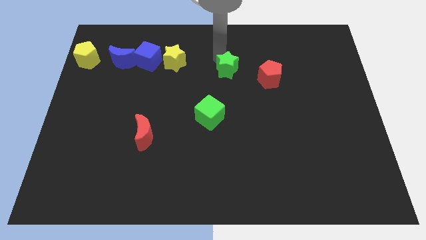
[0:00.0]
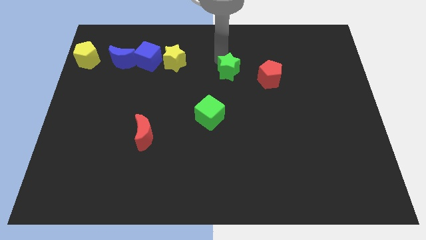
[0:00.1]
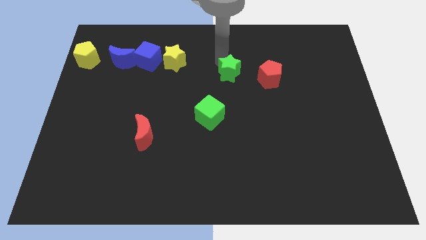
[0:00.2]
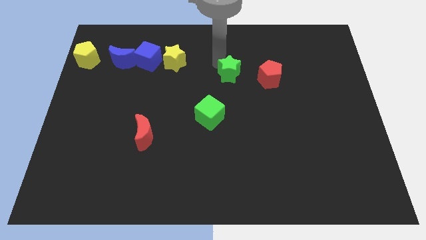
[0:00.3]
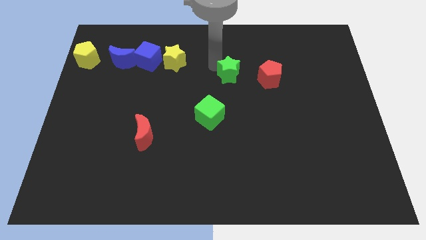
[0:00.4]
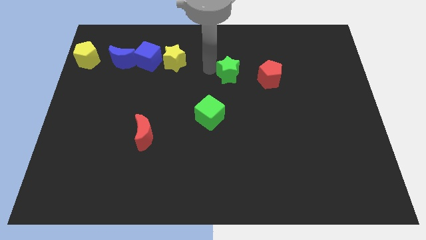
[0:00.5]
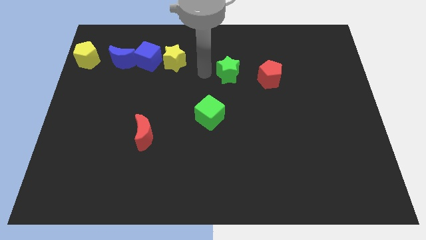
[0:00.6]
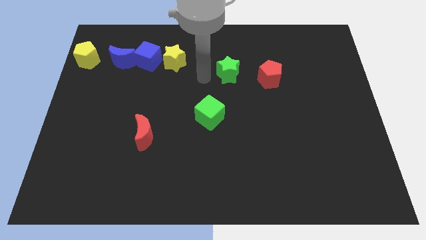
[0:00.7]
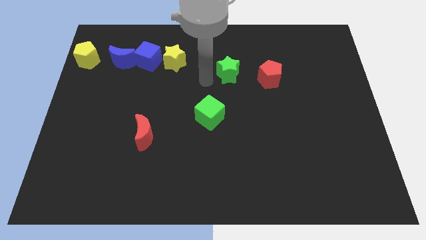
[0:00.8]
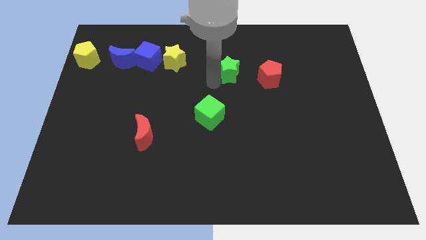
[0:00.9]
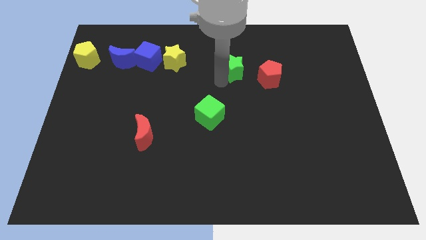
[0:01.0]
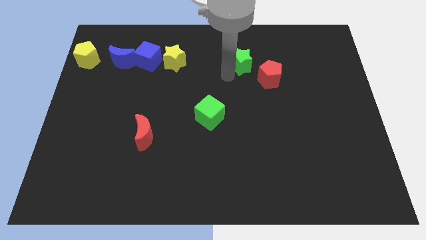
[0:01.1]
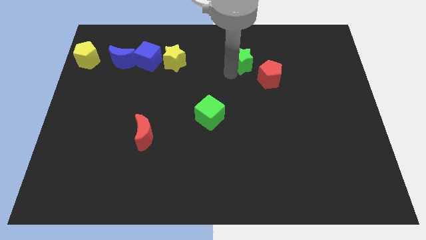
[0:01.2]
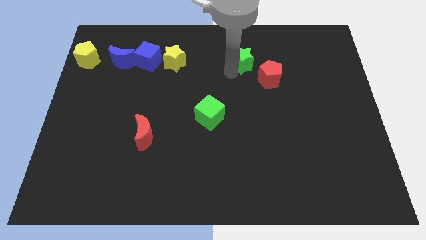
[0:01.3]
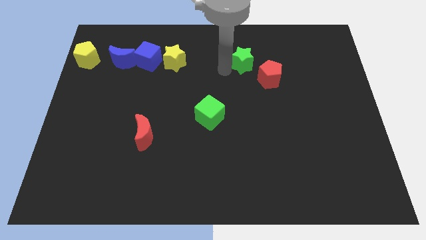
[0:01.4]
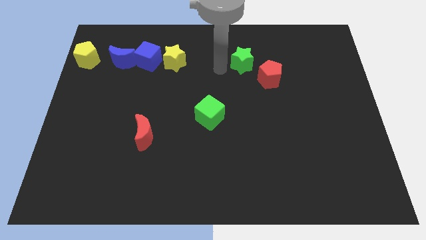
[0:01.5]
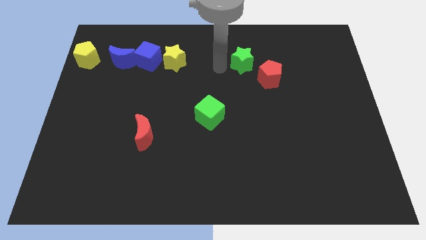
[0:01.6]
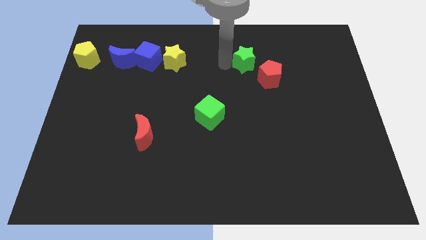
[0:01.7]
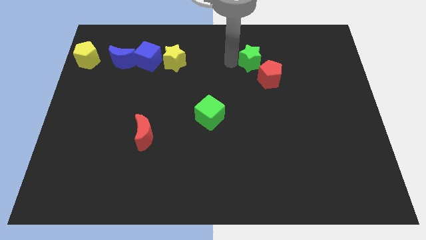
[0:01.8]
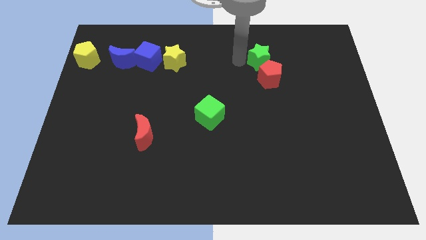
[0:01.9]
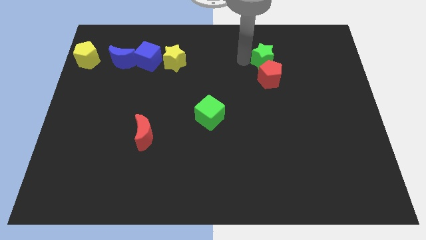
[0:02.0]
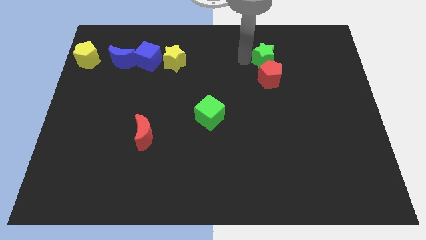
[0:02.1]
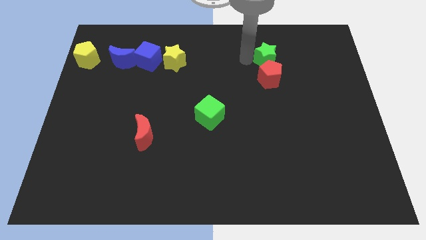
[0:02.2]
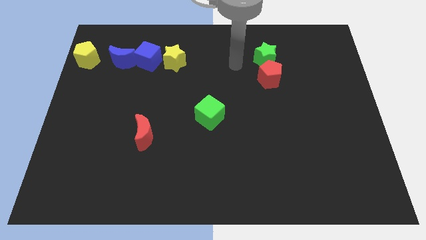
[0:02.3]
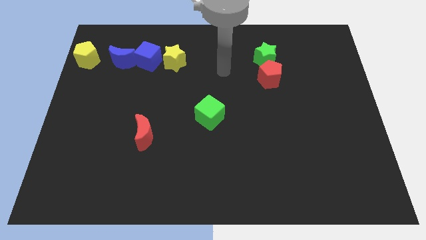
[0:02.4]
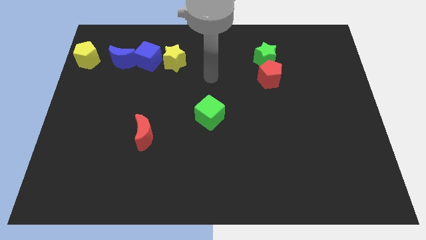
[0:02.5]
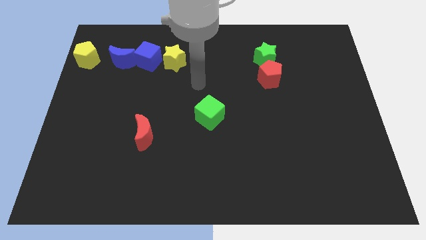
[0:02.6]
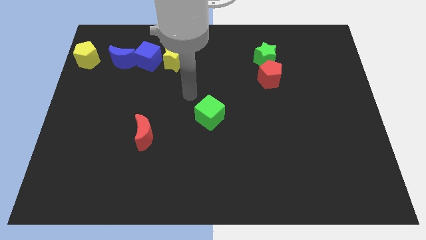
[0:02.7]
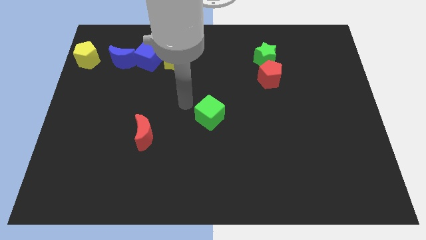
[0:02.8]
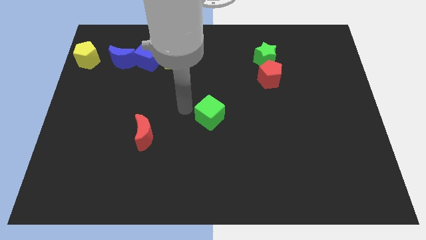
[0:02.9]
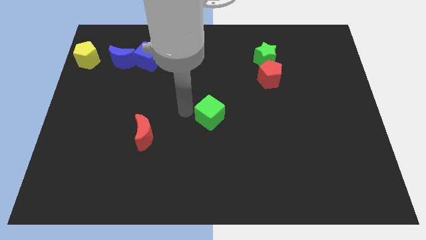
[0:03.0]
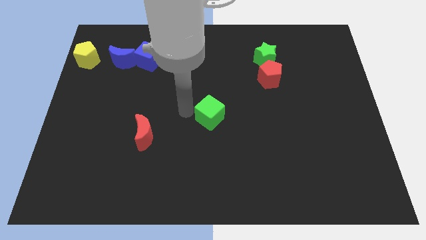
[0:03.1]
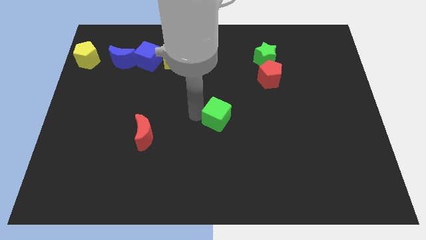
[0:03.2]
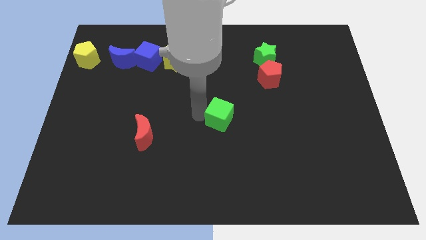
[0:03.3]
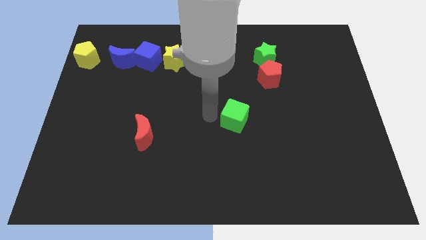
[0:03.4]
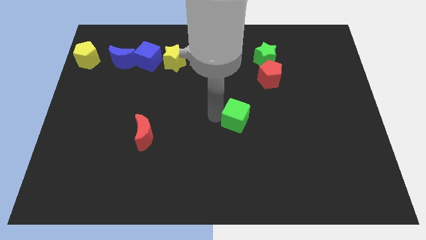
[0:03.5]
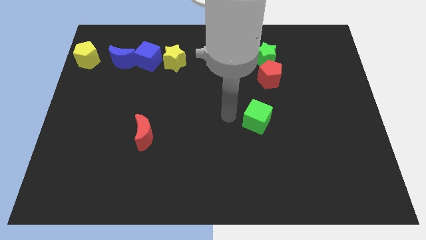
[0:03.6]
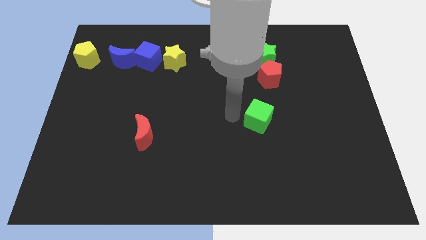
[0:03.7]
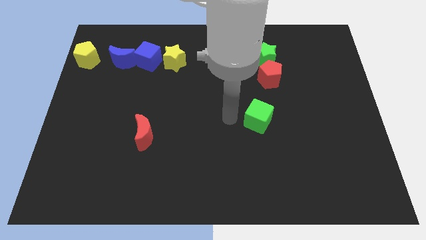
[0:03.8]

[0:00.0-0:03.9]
push green cube slightly towards right

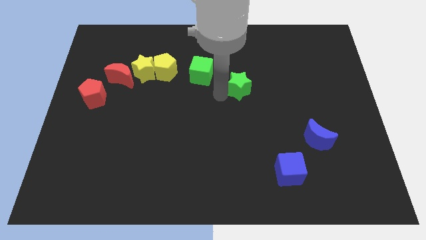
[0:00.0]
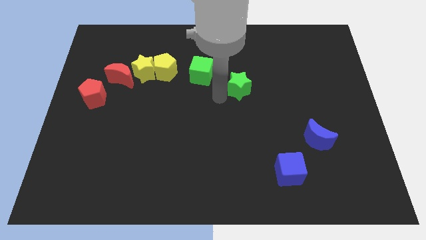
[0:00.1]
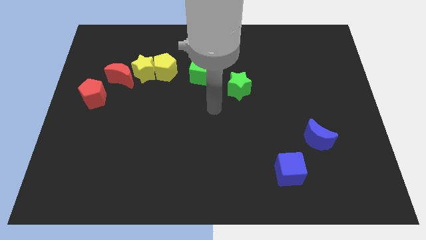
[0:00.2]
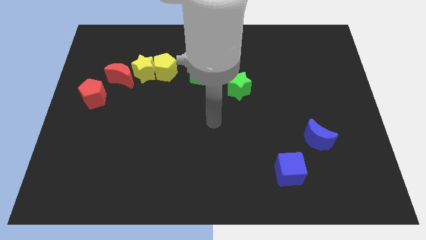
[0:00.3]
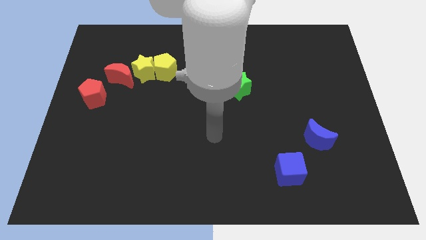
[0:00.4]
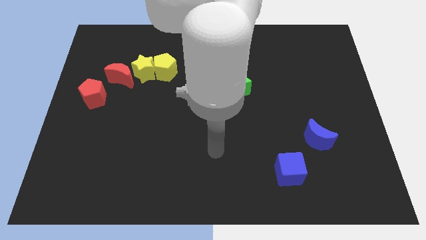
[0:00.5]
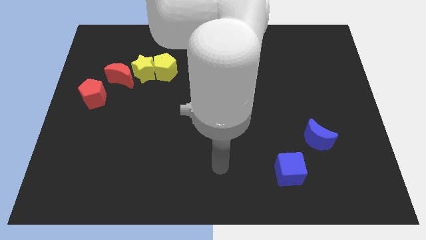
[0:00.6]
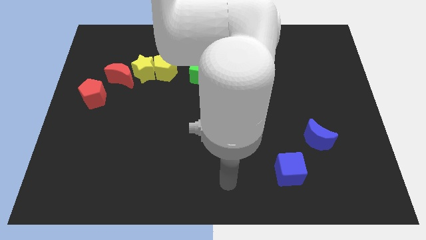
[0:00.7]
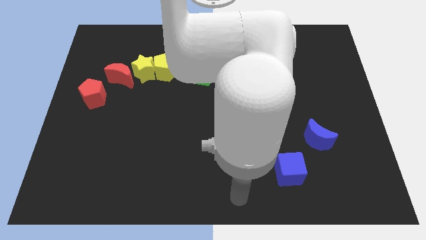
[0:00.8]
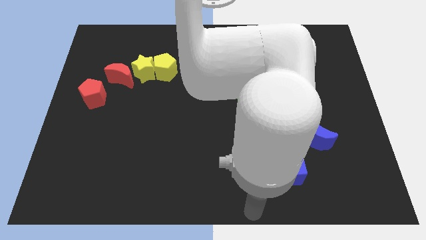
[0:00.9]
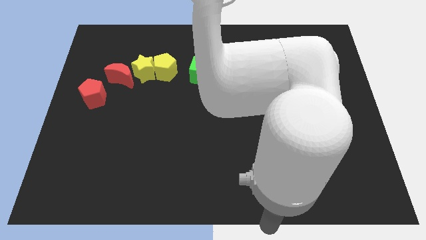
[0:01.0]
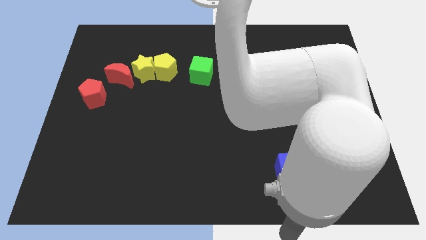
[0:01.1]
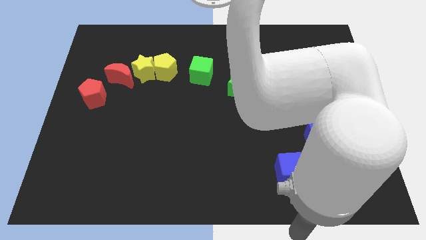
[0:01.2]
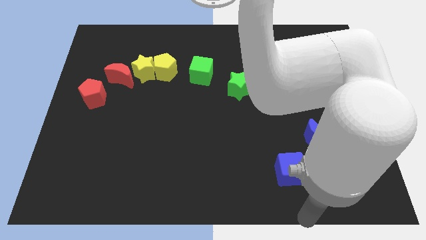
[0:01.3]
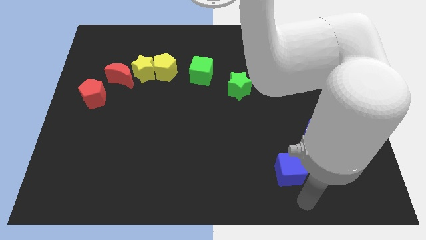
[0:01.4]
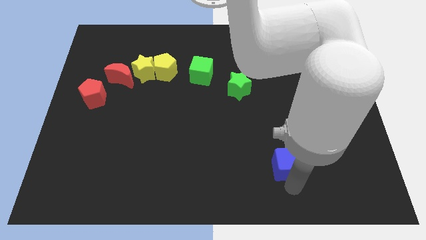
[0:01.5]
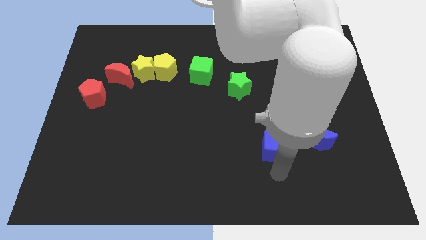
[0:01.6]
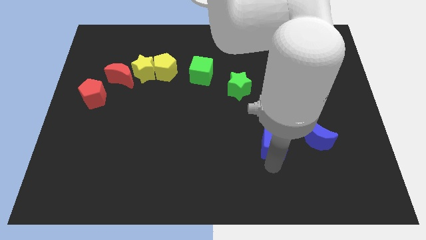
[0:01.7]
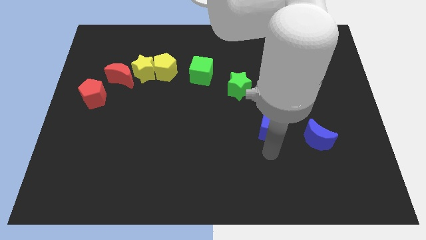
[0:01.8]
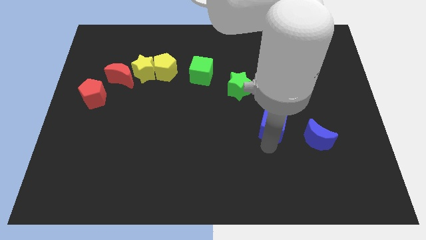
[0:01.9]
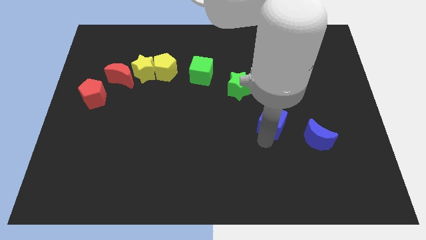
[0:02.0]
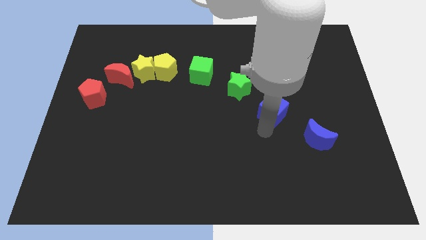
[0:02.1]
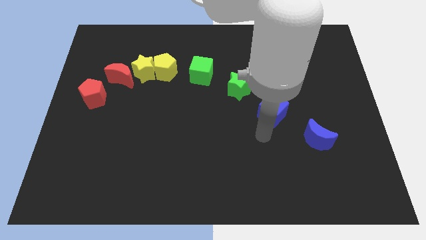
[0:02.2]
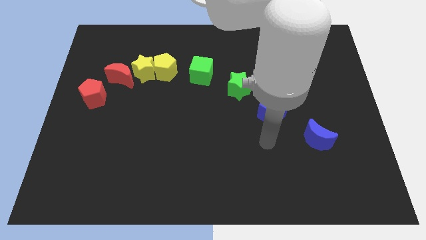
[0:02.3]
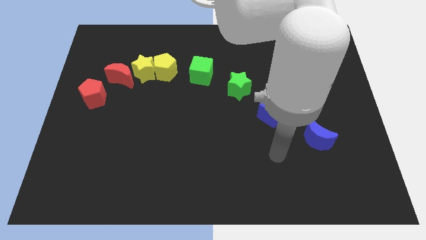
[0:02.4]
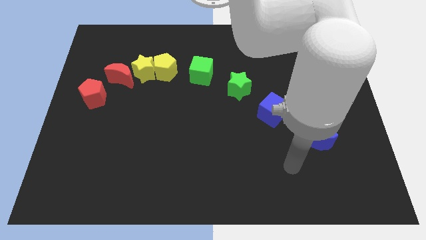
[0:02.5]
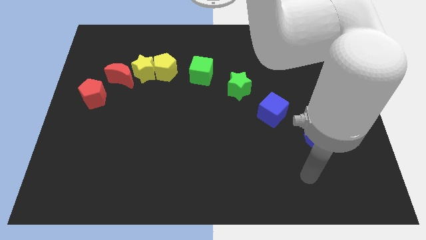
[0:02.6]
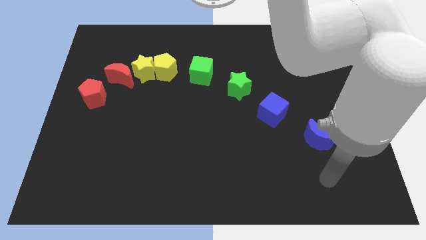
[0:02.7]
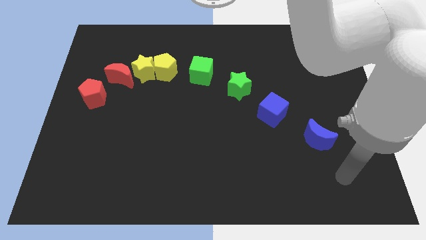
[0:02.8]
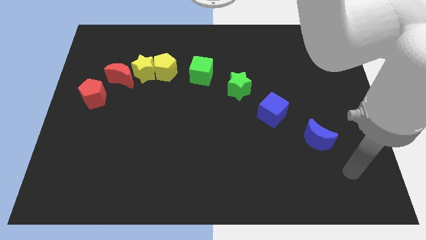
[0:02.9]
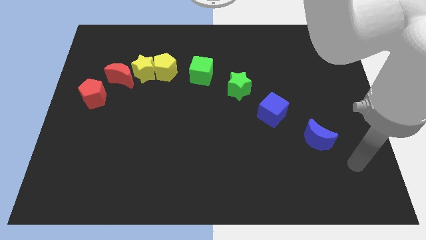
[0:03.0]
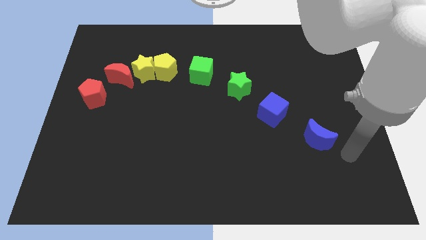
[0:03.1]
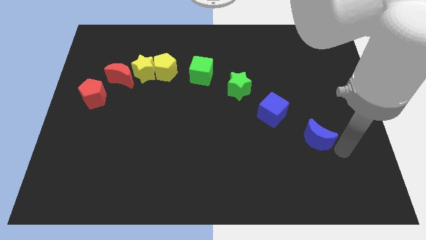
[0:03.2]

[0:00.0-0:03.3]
place the blue cube diagonally to green star

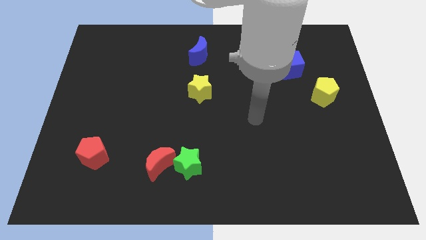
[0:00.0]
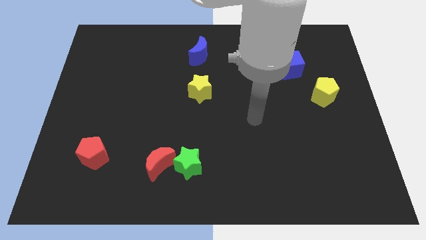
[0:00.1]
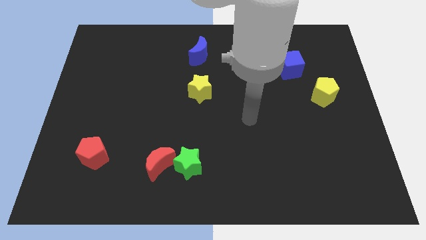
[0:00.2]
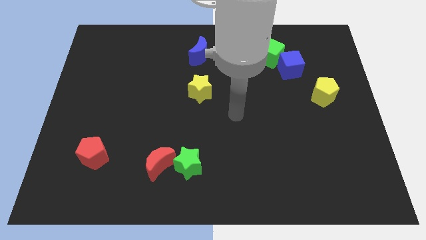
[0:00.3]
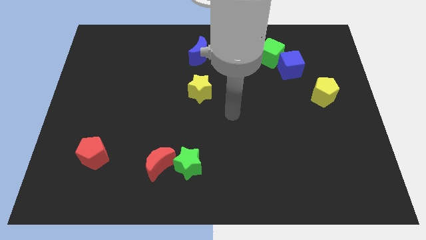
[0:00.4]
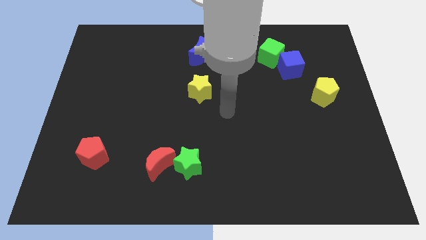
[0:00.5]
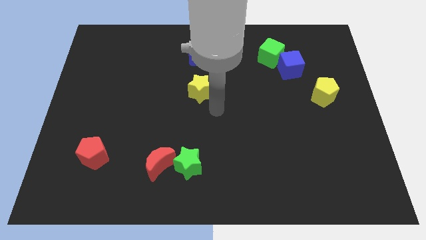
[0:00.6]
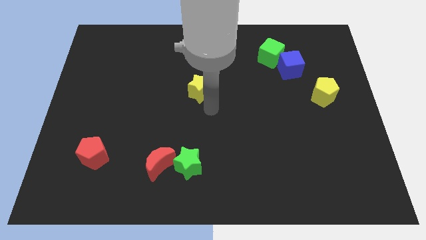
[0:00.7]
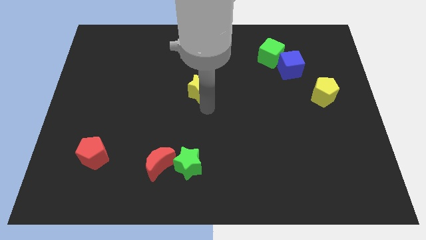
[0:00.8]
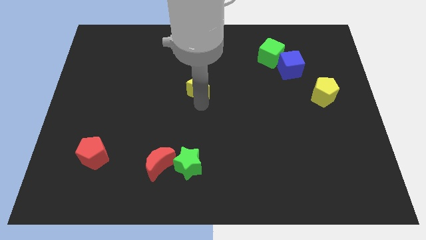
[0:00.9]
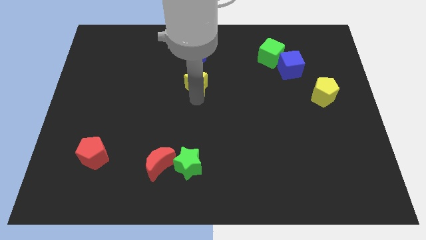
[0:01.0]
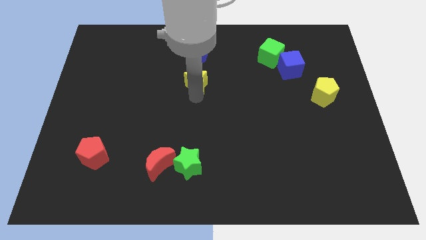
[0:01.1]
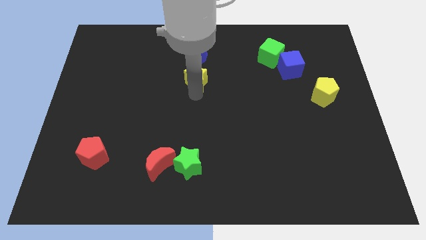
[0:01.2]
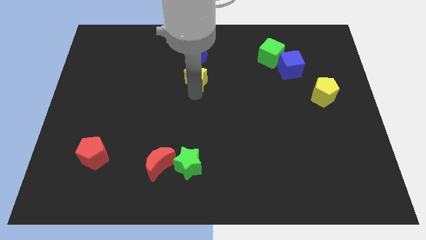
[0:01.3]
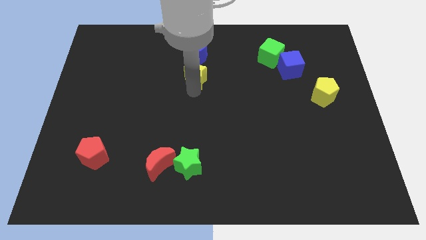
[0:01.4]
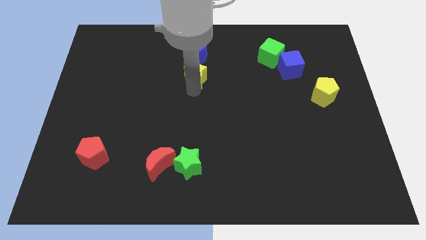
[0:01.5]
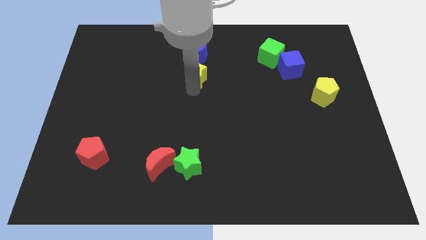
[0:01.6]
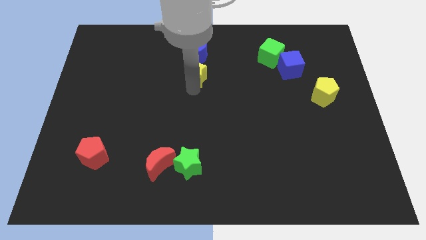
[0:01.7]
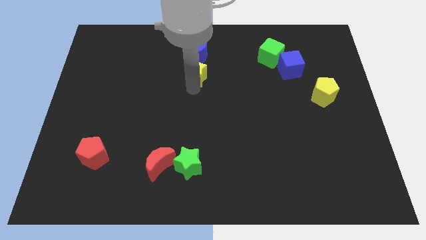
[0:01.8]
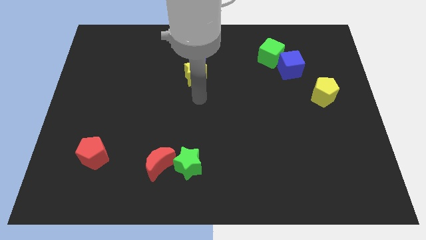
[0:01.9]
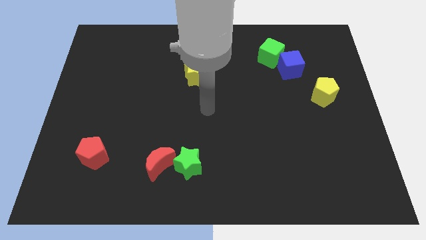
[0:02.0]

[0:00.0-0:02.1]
move yellow star towards blue moon
